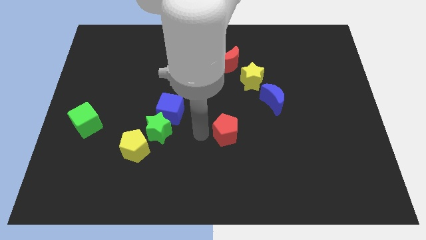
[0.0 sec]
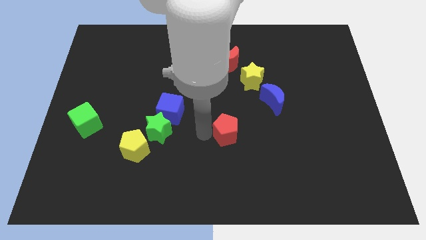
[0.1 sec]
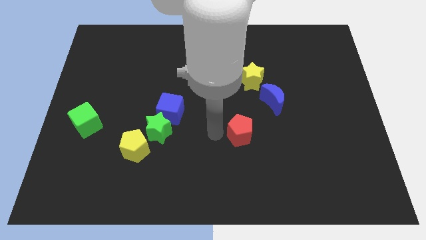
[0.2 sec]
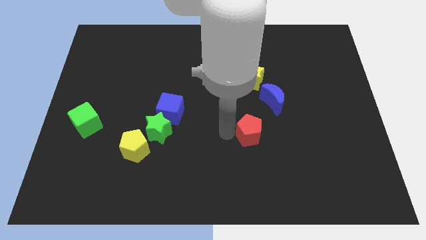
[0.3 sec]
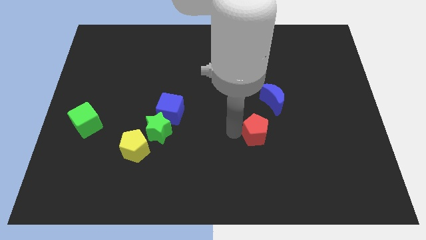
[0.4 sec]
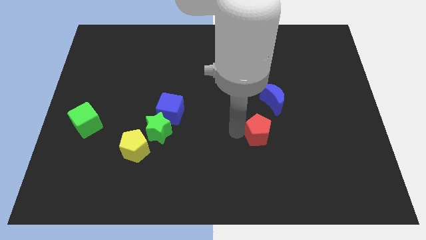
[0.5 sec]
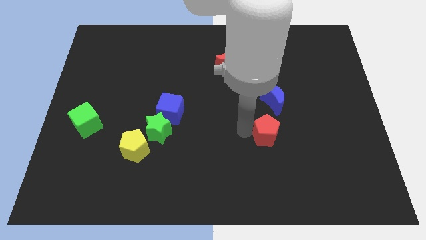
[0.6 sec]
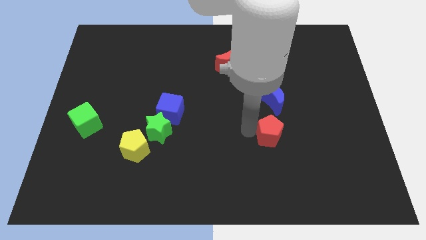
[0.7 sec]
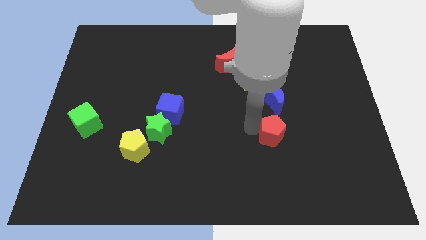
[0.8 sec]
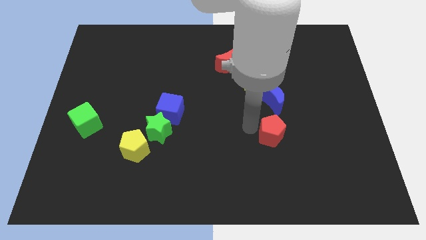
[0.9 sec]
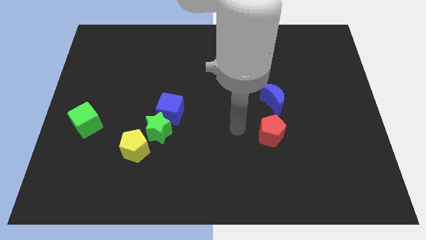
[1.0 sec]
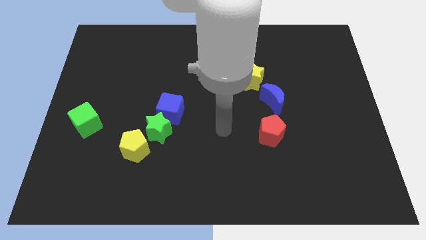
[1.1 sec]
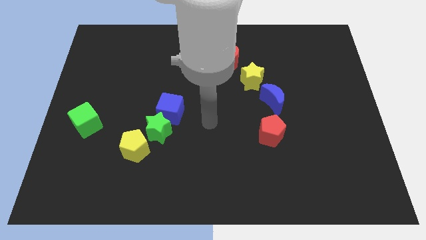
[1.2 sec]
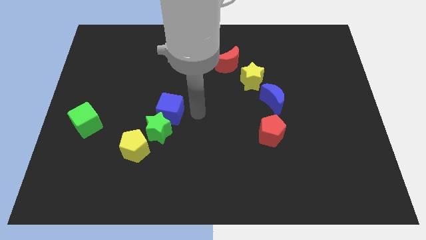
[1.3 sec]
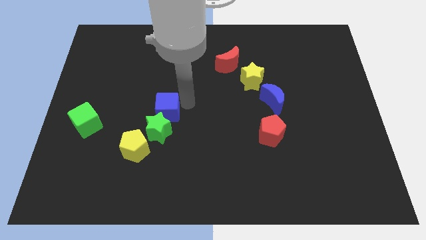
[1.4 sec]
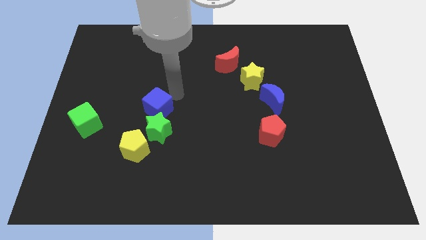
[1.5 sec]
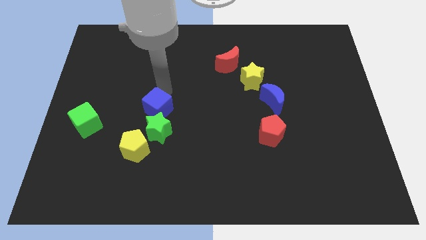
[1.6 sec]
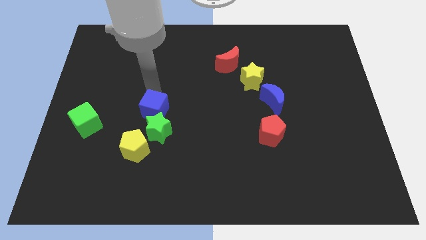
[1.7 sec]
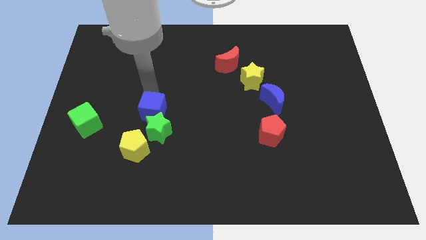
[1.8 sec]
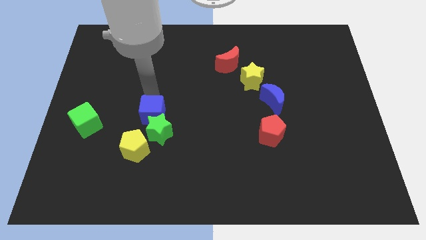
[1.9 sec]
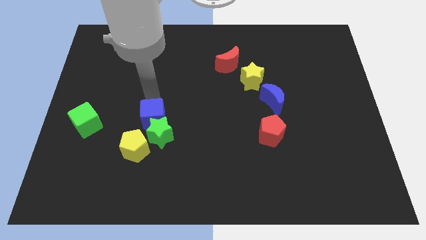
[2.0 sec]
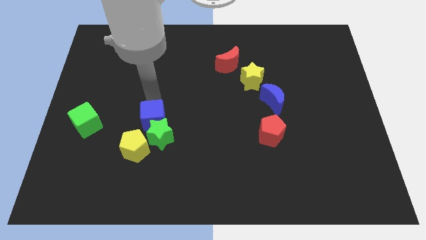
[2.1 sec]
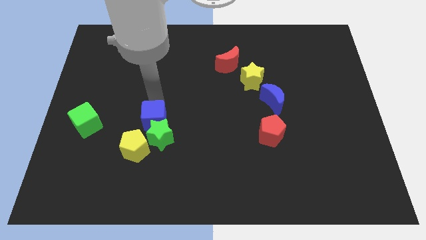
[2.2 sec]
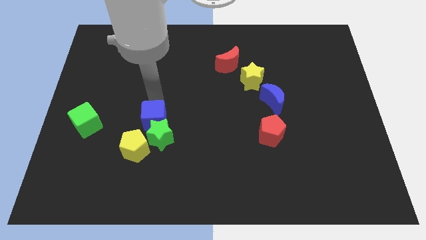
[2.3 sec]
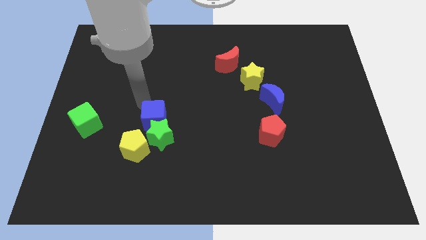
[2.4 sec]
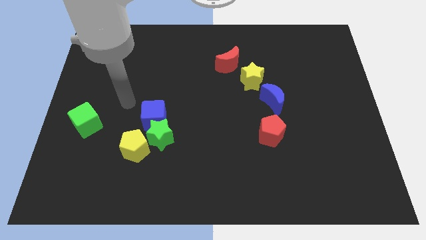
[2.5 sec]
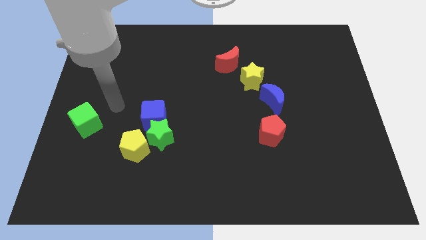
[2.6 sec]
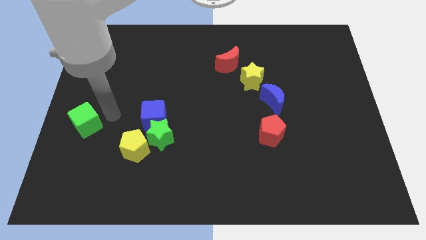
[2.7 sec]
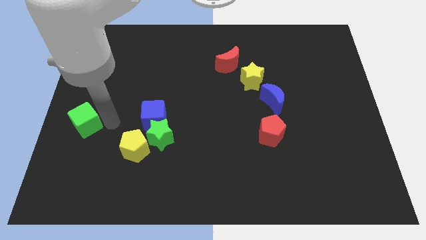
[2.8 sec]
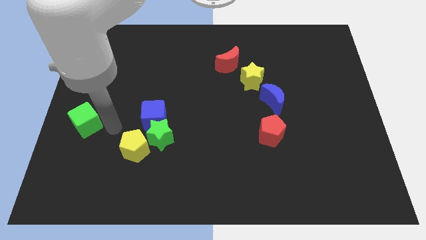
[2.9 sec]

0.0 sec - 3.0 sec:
push blue cube in to green star

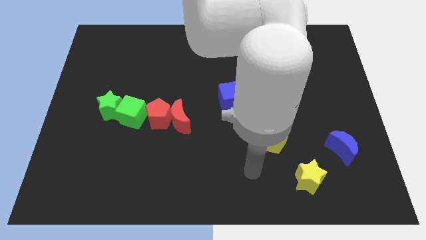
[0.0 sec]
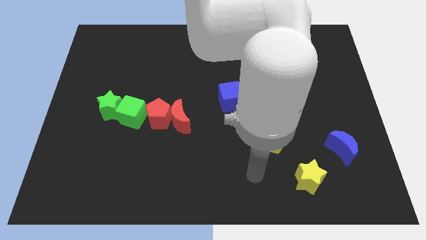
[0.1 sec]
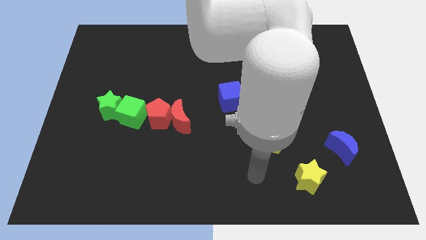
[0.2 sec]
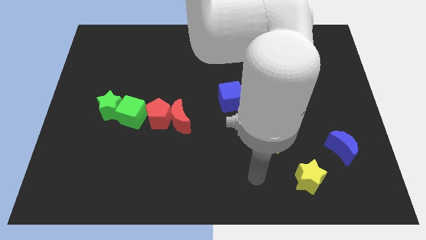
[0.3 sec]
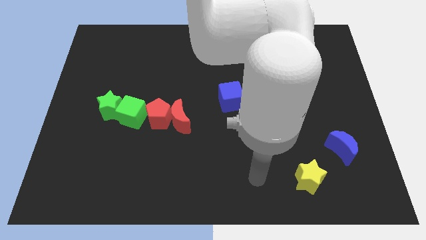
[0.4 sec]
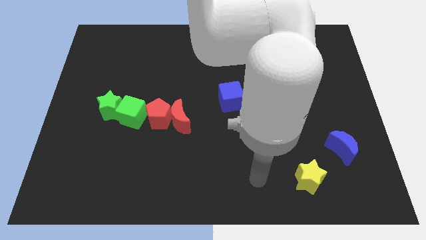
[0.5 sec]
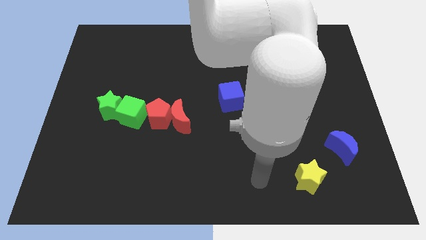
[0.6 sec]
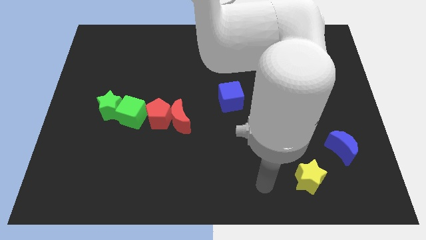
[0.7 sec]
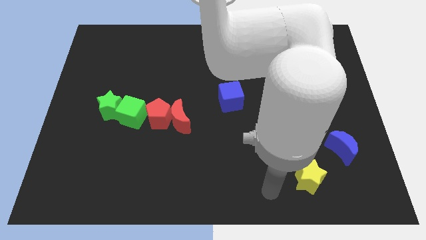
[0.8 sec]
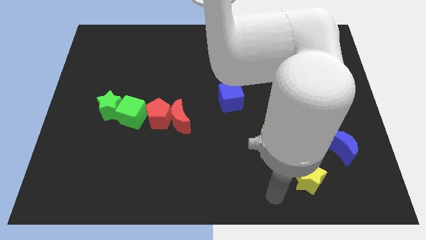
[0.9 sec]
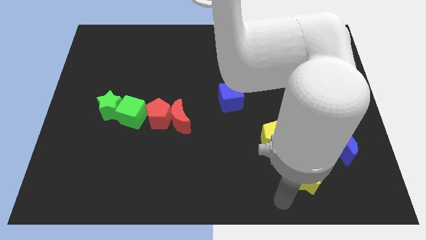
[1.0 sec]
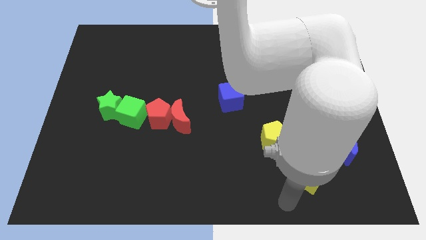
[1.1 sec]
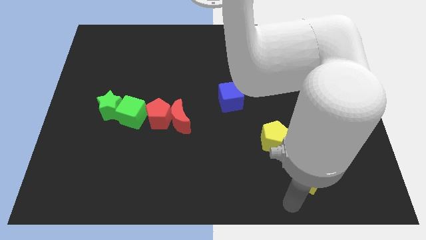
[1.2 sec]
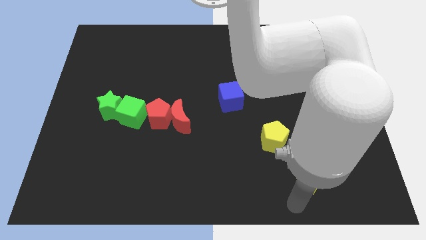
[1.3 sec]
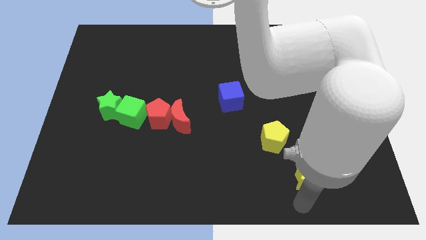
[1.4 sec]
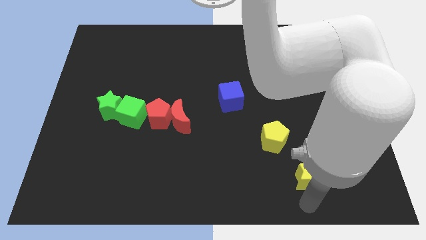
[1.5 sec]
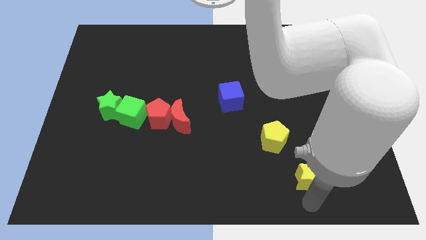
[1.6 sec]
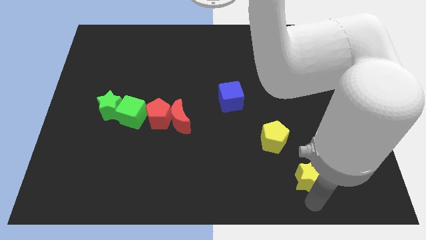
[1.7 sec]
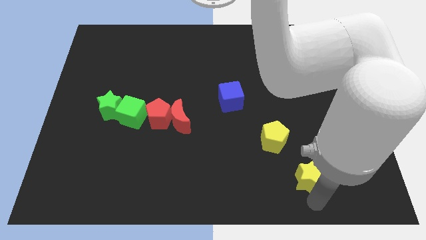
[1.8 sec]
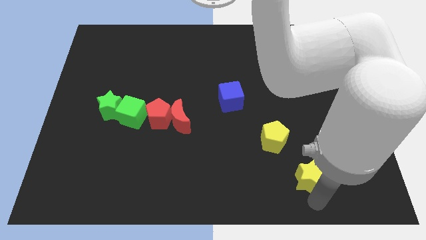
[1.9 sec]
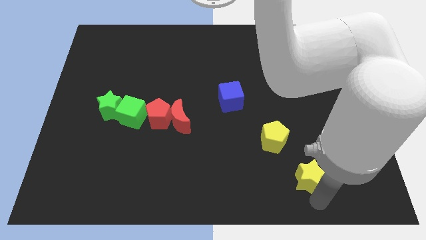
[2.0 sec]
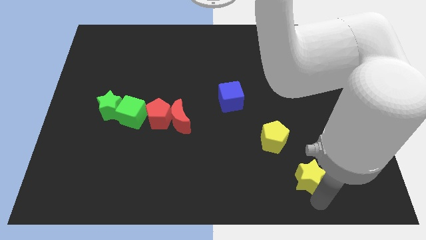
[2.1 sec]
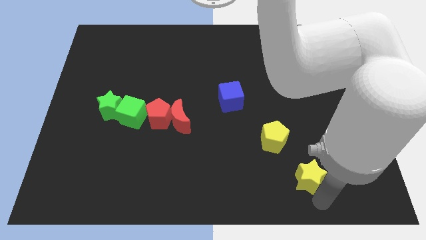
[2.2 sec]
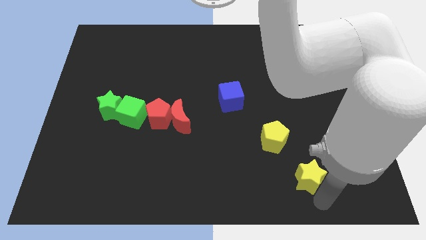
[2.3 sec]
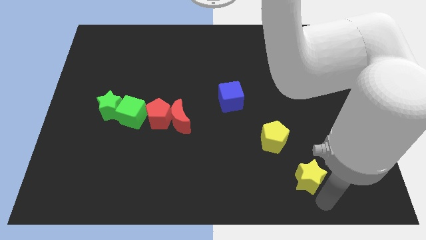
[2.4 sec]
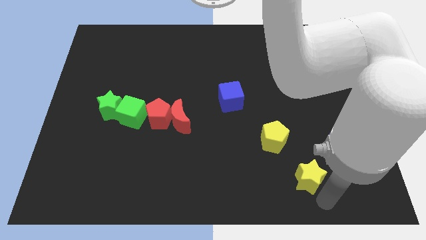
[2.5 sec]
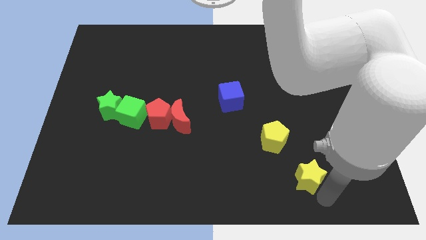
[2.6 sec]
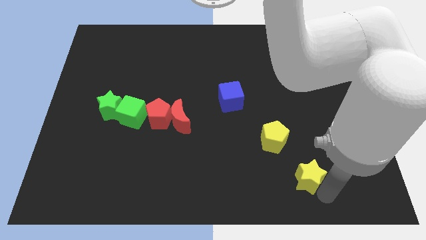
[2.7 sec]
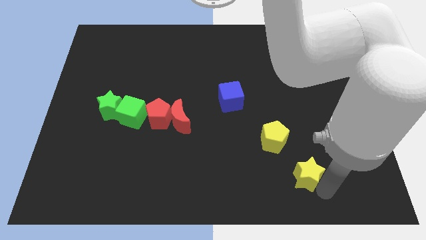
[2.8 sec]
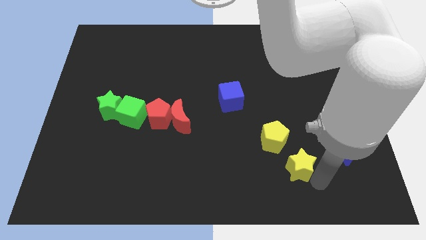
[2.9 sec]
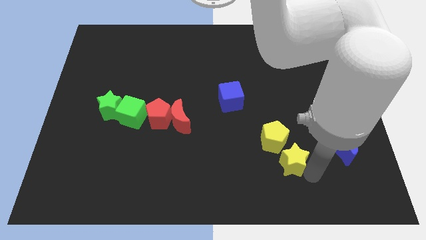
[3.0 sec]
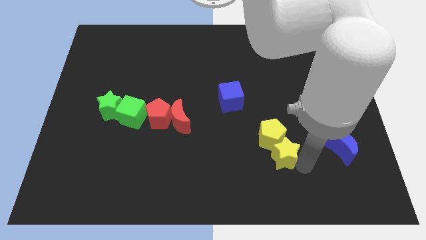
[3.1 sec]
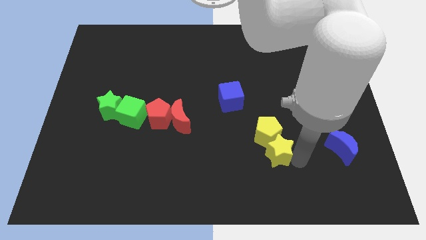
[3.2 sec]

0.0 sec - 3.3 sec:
push the yellow star into the yellow pentagon

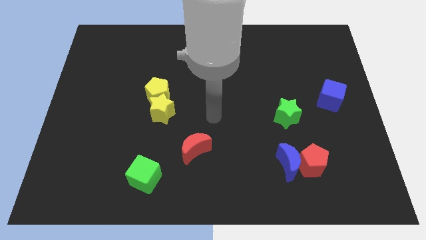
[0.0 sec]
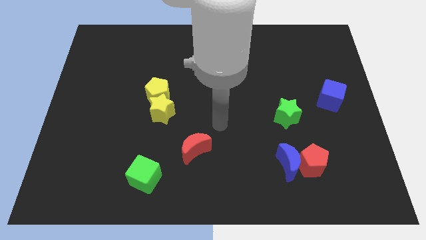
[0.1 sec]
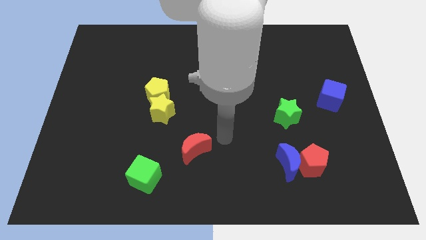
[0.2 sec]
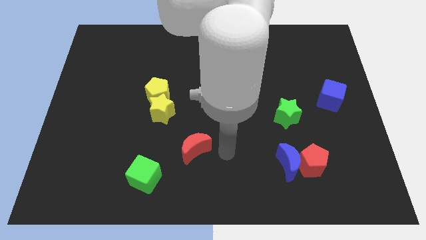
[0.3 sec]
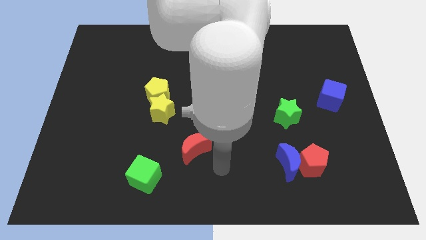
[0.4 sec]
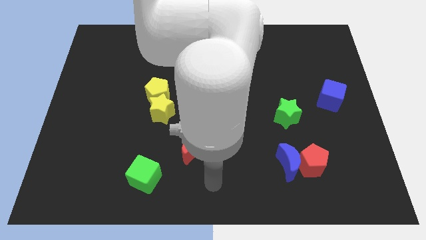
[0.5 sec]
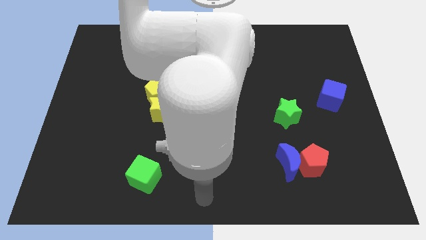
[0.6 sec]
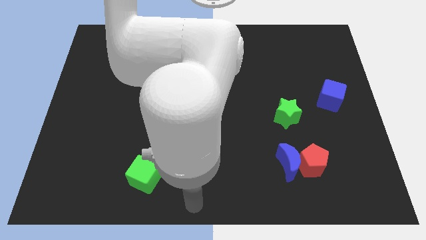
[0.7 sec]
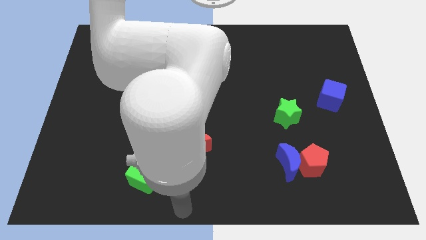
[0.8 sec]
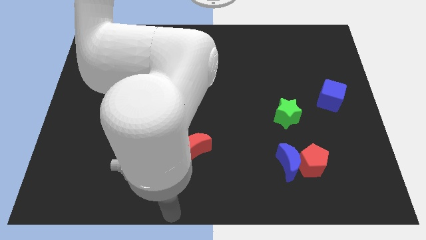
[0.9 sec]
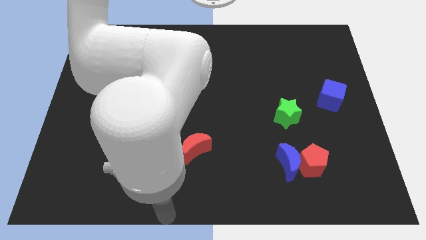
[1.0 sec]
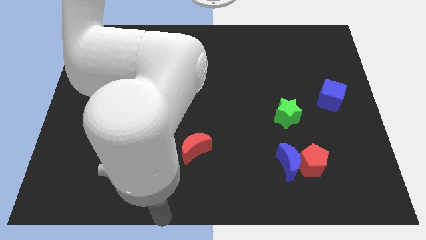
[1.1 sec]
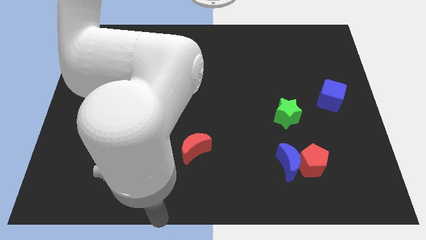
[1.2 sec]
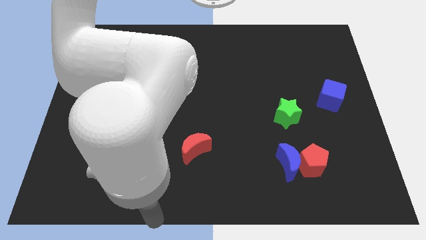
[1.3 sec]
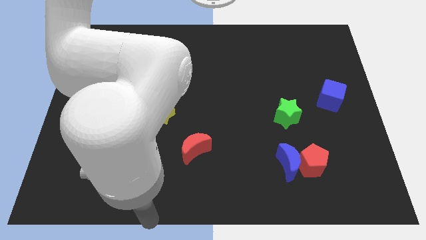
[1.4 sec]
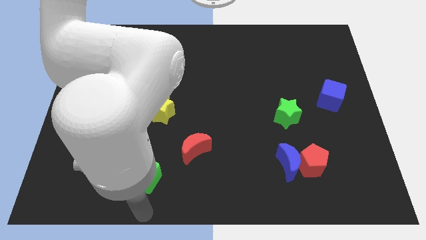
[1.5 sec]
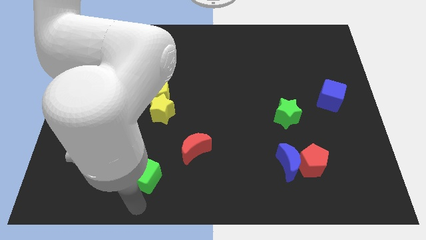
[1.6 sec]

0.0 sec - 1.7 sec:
point your arm at the bottom of green cube

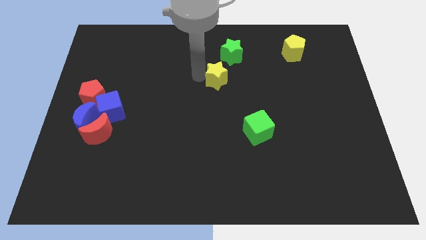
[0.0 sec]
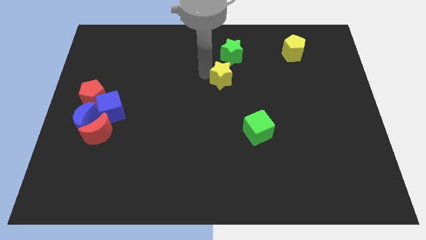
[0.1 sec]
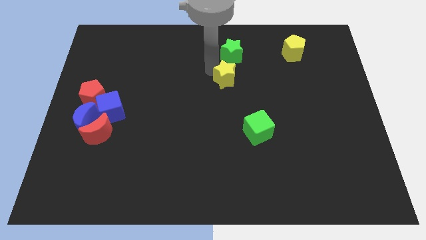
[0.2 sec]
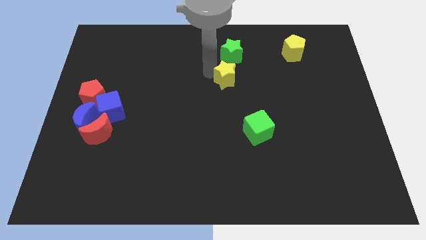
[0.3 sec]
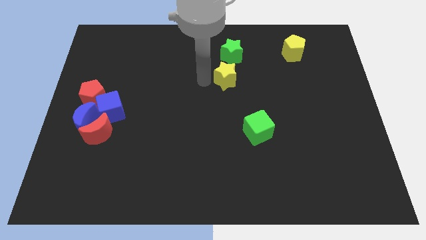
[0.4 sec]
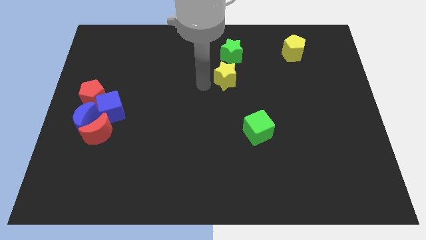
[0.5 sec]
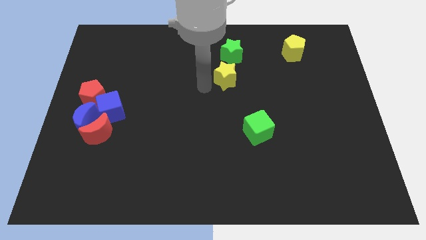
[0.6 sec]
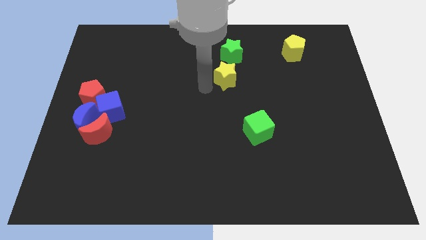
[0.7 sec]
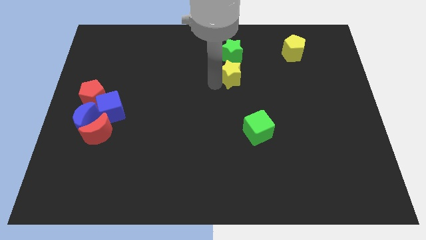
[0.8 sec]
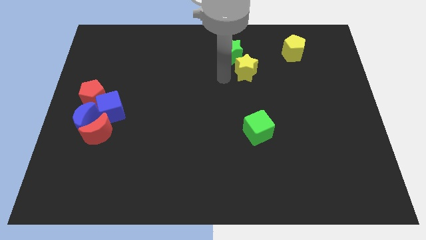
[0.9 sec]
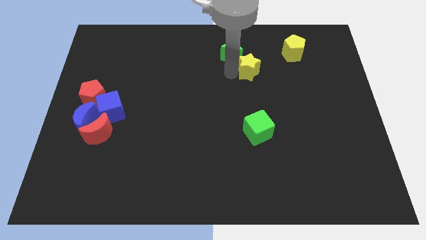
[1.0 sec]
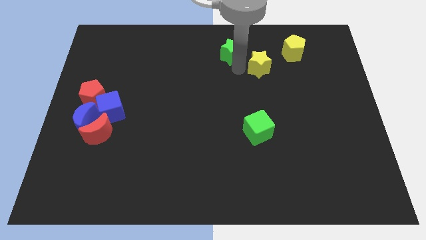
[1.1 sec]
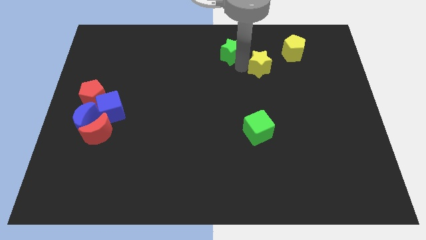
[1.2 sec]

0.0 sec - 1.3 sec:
move the yellow star towards the left side of the yellow pentagon
